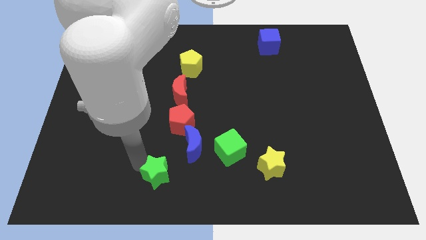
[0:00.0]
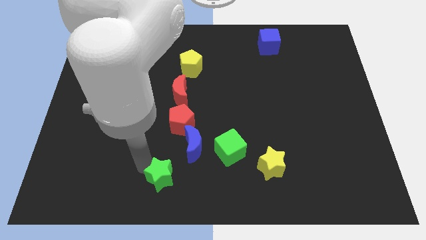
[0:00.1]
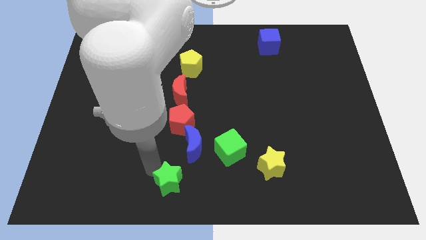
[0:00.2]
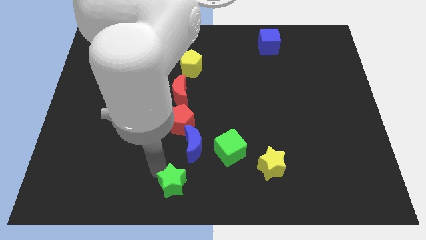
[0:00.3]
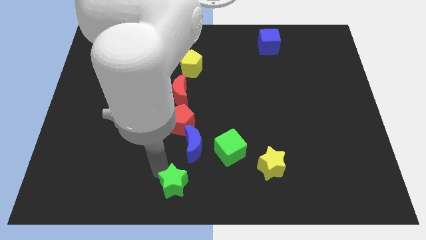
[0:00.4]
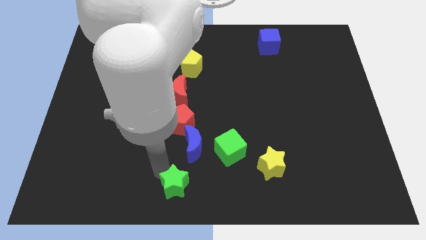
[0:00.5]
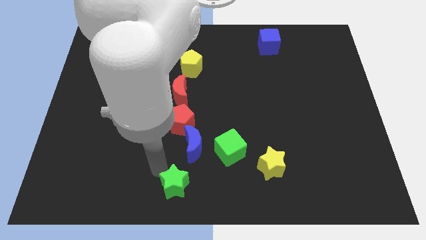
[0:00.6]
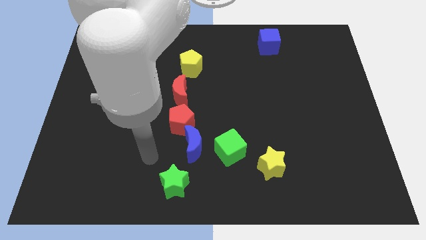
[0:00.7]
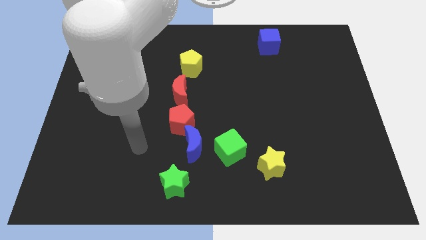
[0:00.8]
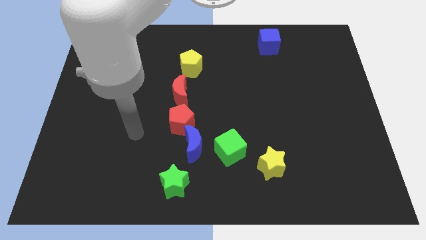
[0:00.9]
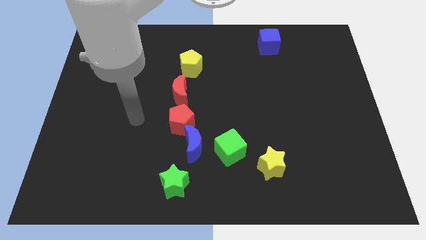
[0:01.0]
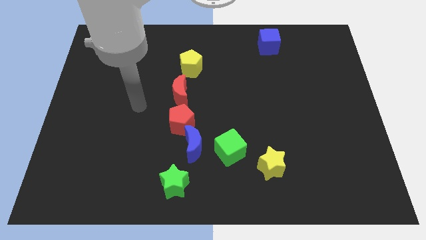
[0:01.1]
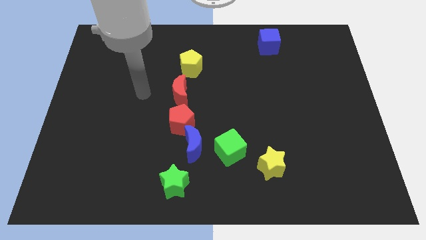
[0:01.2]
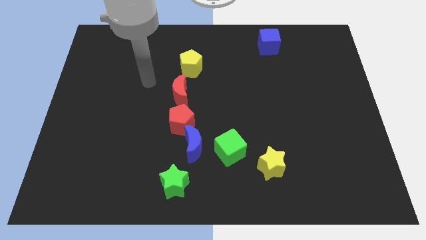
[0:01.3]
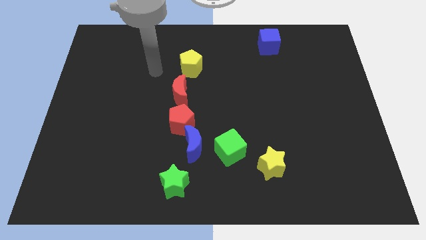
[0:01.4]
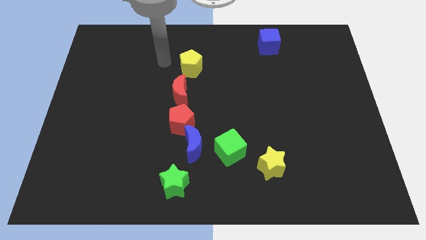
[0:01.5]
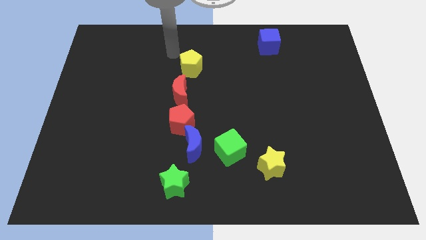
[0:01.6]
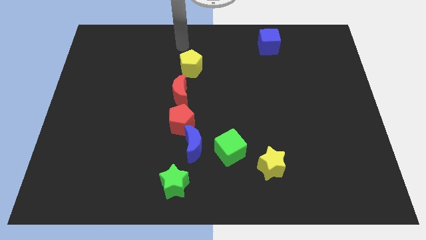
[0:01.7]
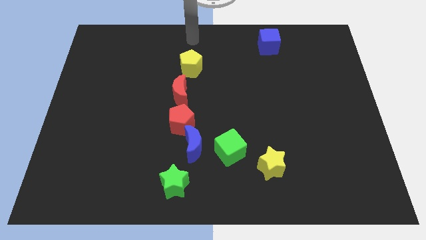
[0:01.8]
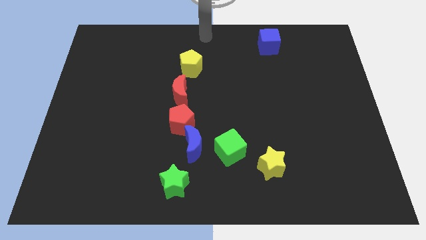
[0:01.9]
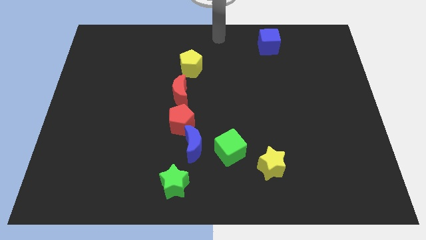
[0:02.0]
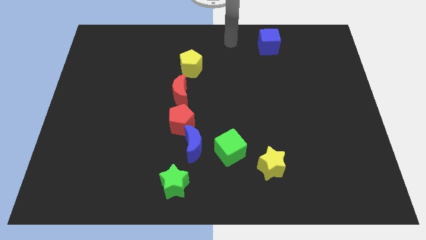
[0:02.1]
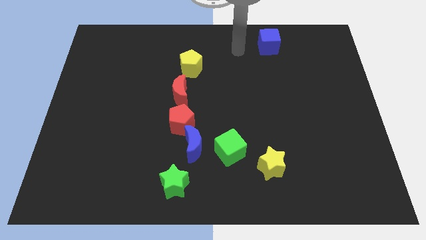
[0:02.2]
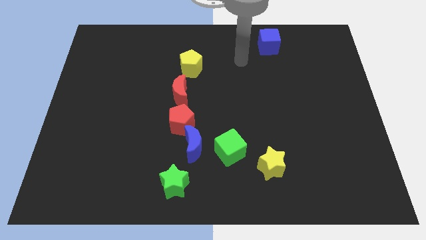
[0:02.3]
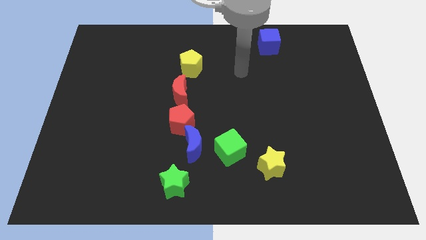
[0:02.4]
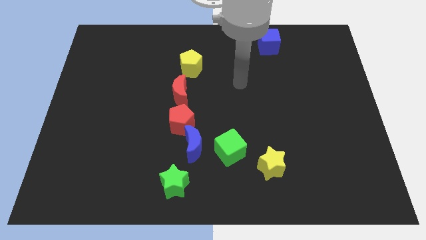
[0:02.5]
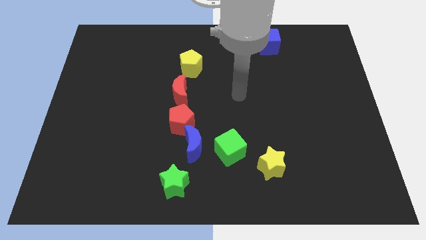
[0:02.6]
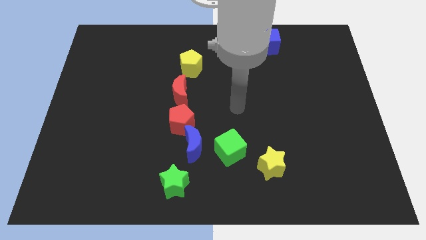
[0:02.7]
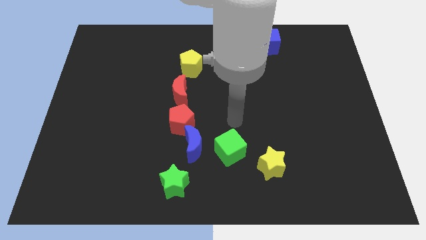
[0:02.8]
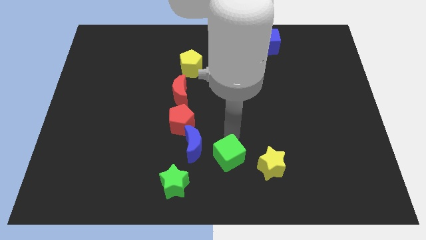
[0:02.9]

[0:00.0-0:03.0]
move your arm to the top of green cube

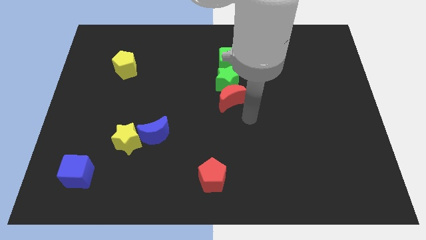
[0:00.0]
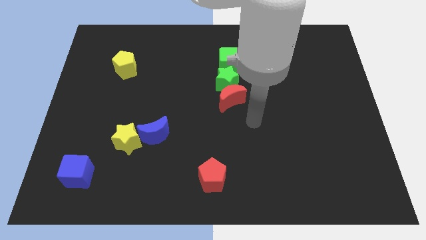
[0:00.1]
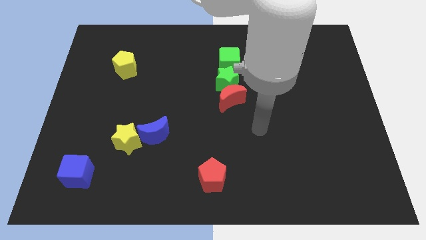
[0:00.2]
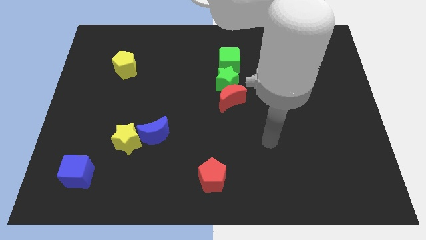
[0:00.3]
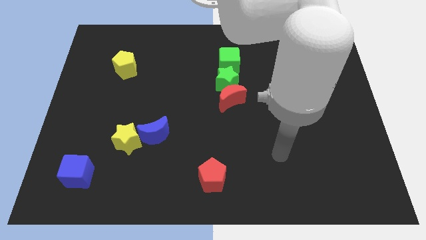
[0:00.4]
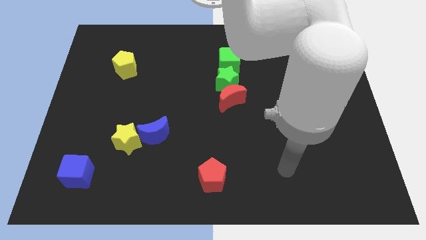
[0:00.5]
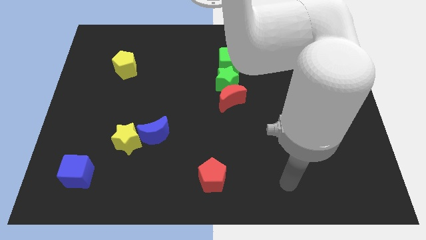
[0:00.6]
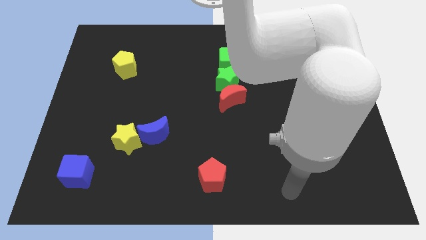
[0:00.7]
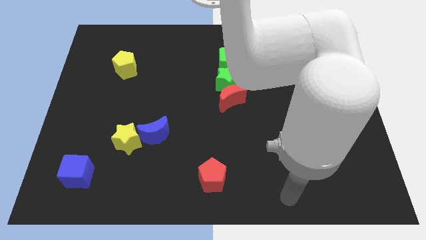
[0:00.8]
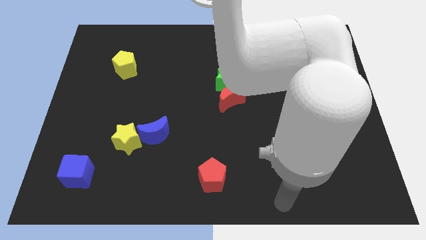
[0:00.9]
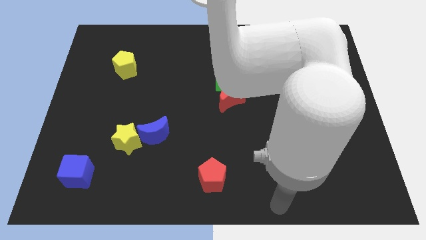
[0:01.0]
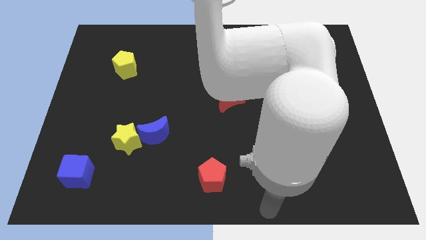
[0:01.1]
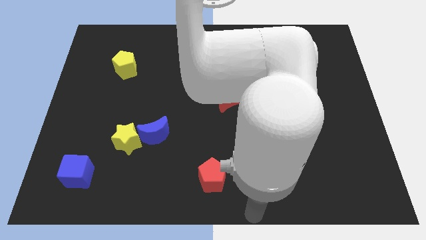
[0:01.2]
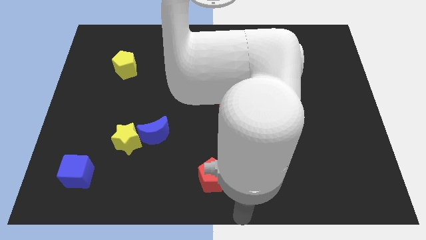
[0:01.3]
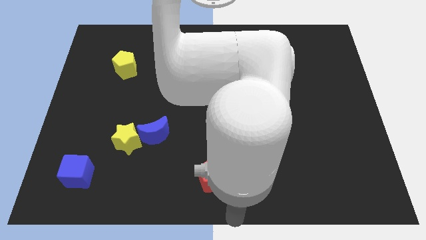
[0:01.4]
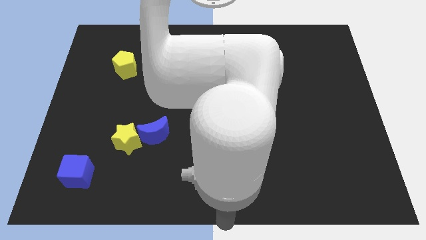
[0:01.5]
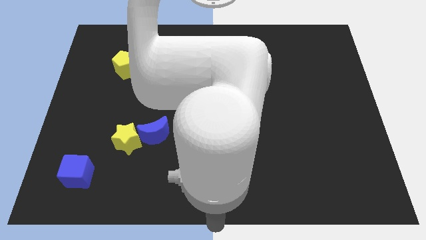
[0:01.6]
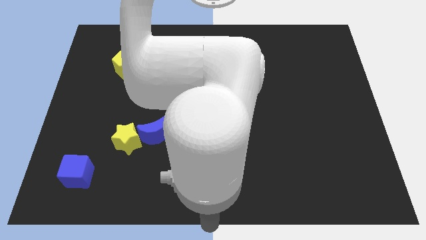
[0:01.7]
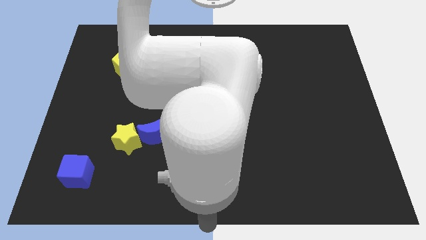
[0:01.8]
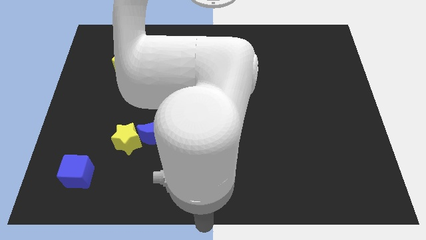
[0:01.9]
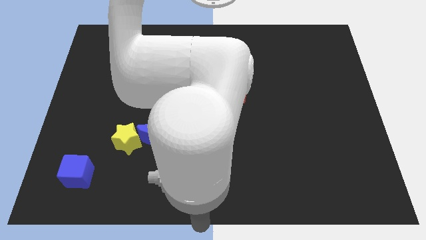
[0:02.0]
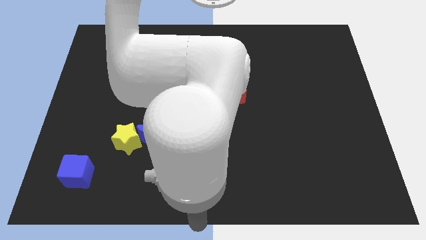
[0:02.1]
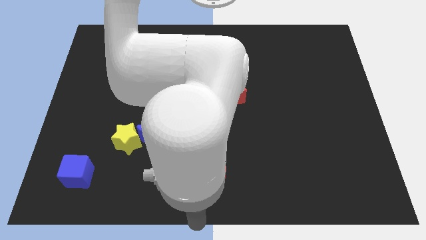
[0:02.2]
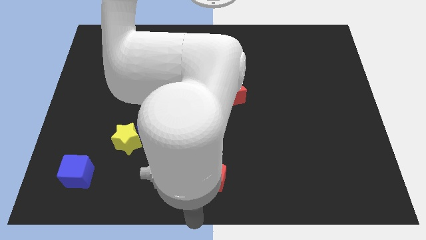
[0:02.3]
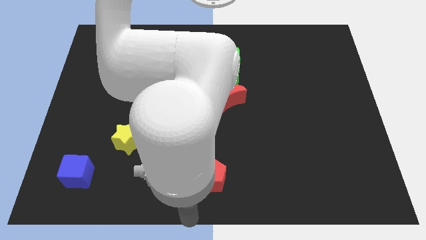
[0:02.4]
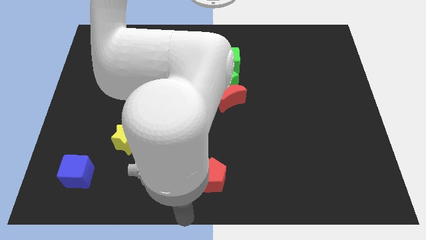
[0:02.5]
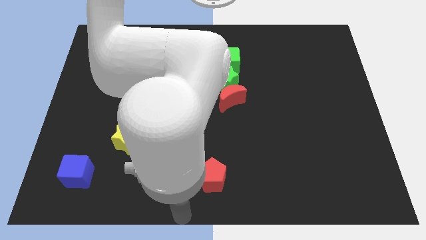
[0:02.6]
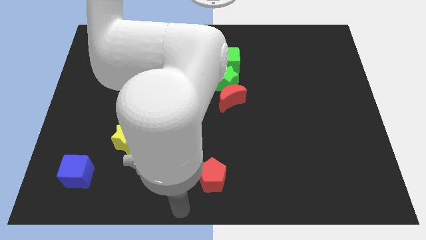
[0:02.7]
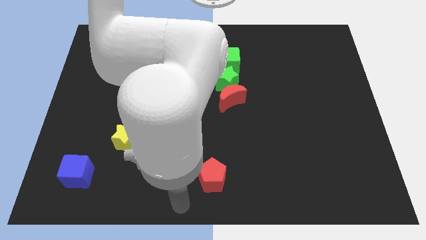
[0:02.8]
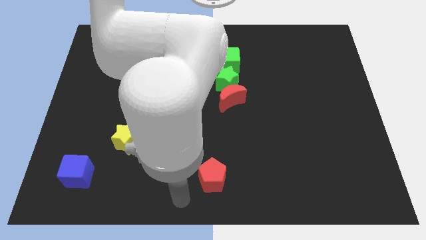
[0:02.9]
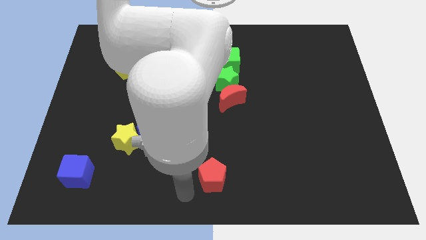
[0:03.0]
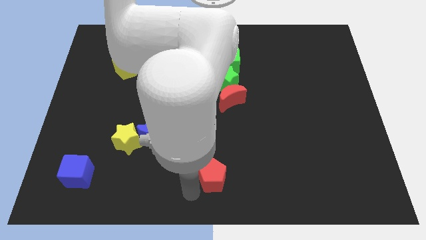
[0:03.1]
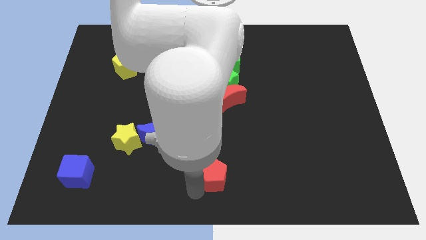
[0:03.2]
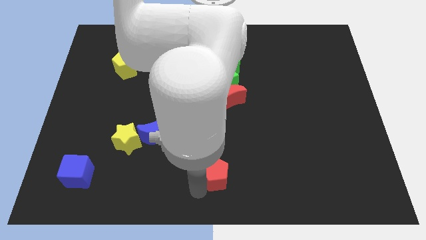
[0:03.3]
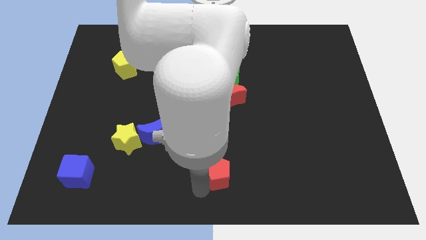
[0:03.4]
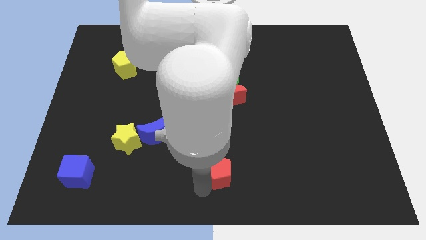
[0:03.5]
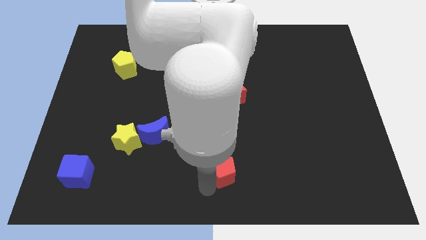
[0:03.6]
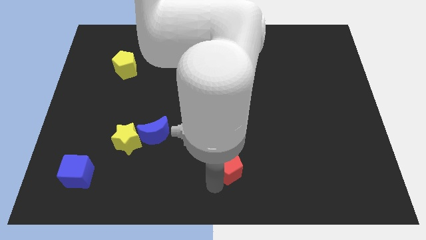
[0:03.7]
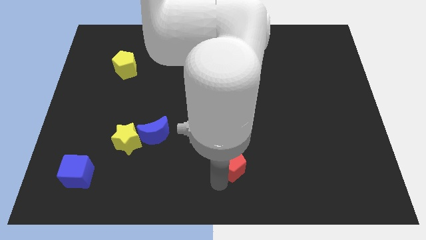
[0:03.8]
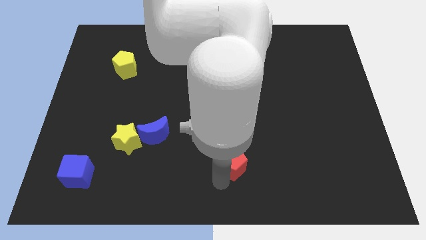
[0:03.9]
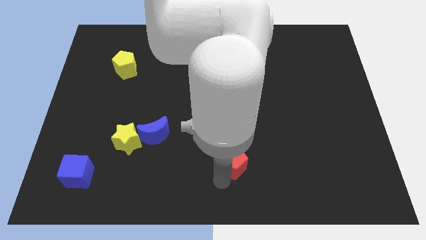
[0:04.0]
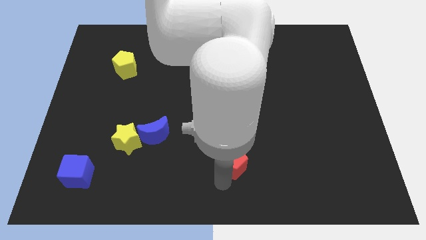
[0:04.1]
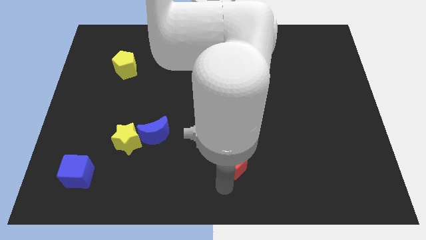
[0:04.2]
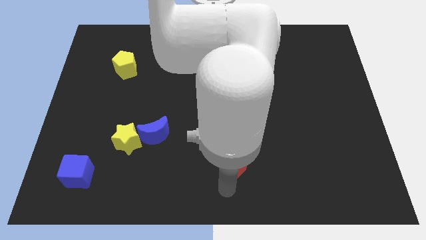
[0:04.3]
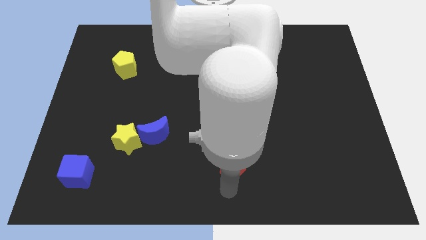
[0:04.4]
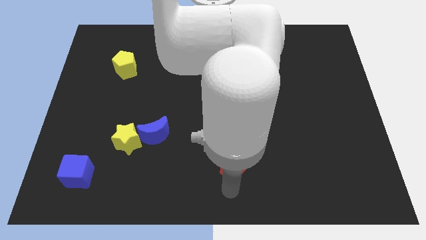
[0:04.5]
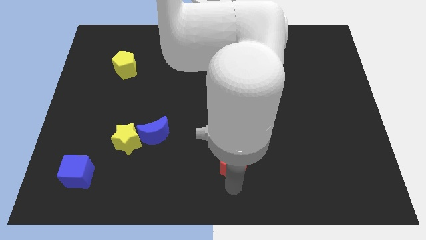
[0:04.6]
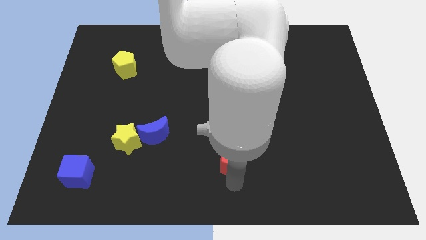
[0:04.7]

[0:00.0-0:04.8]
move the red pentagon upwards

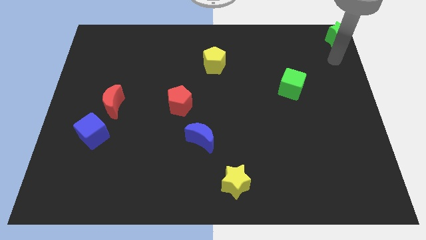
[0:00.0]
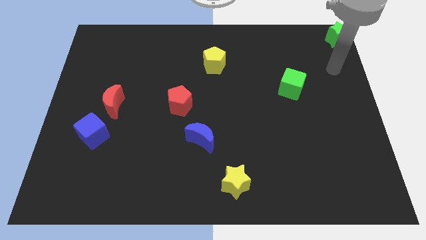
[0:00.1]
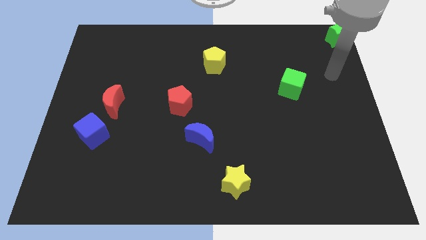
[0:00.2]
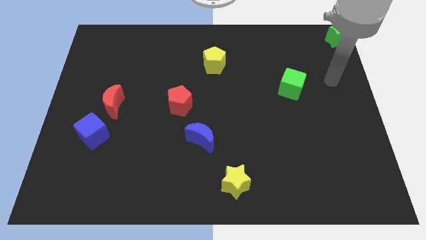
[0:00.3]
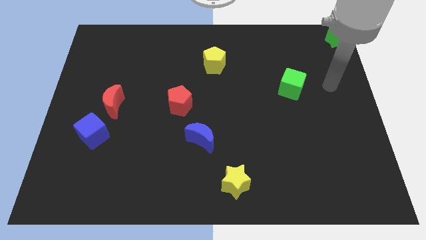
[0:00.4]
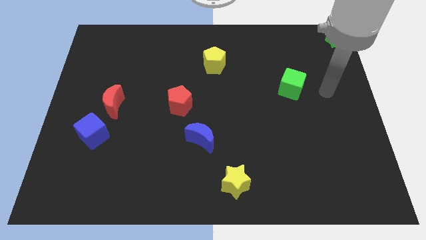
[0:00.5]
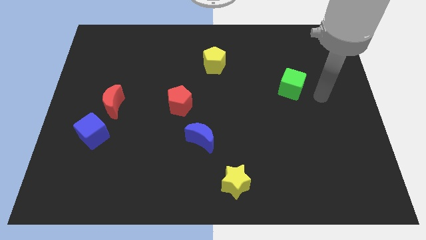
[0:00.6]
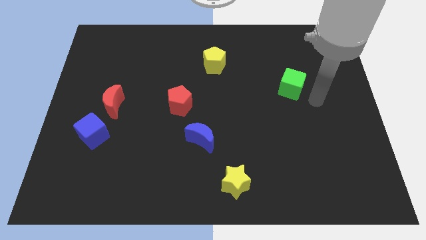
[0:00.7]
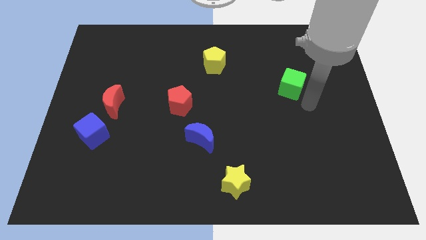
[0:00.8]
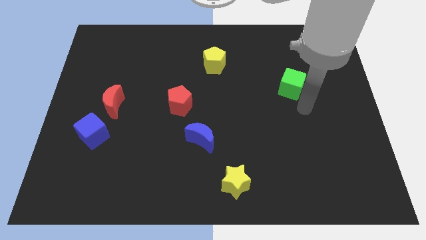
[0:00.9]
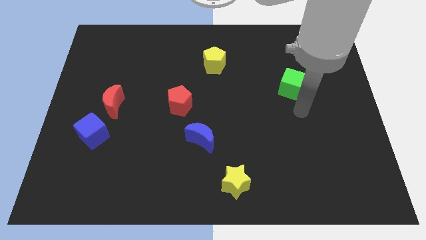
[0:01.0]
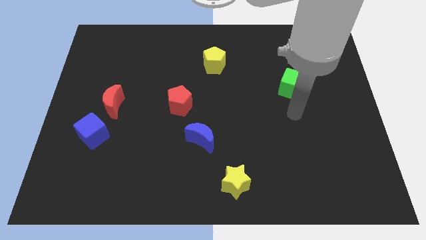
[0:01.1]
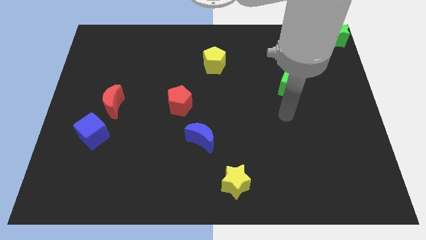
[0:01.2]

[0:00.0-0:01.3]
move the arm towards the bottom of the green cube
